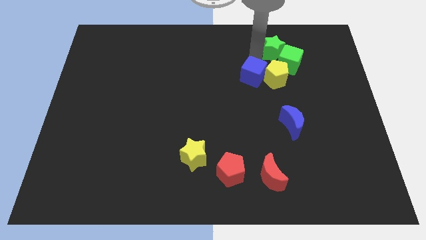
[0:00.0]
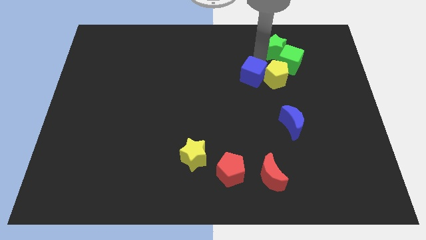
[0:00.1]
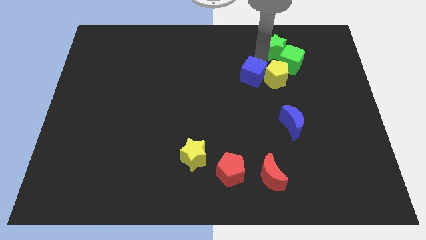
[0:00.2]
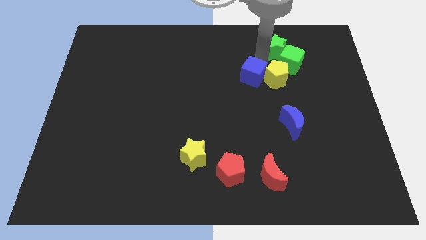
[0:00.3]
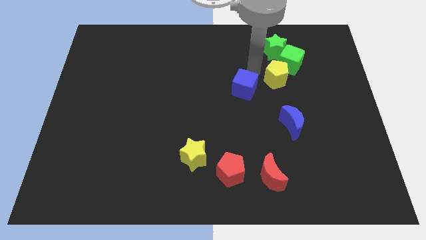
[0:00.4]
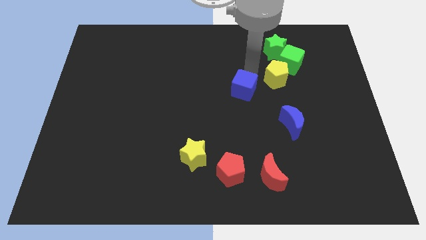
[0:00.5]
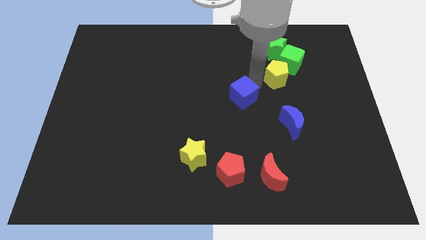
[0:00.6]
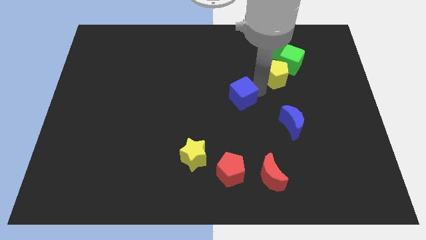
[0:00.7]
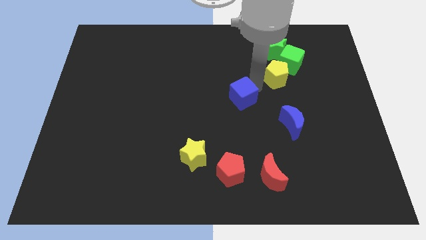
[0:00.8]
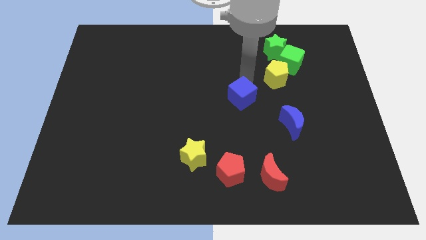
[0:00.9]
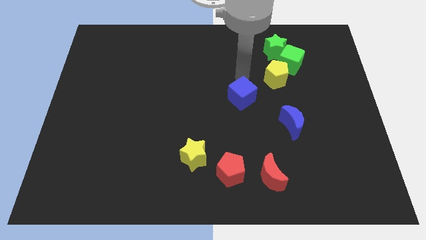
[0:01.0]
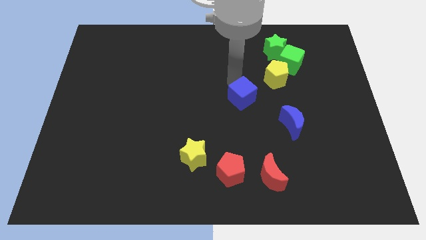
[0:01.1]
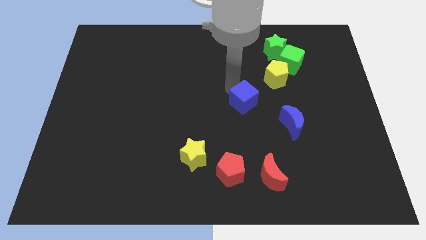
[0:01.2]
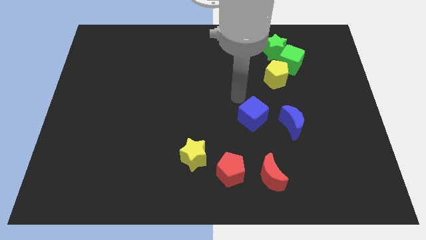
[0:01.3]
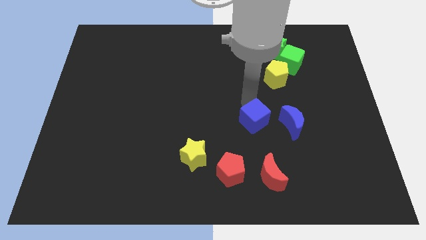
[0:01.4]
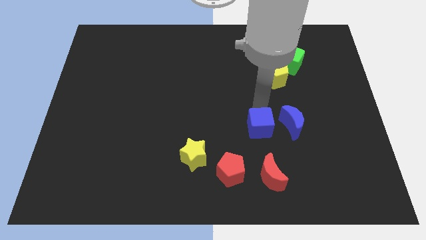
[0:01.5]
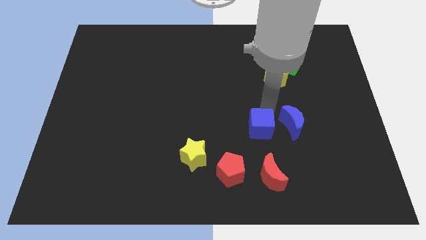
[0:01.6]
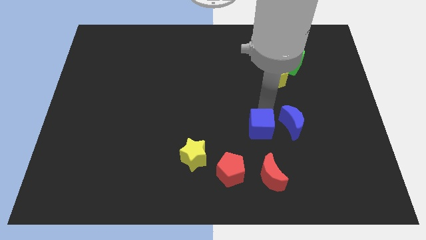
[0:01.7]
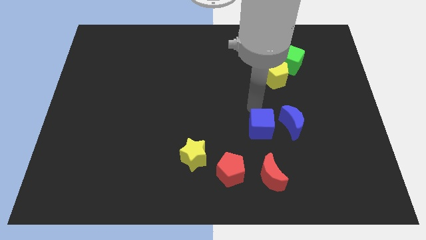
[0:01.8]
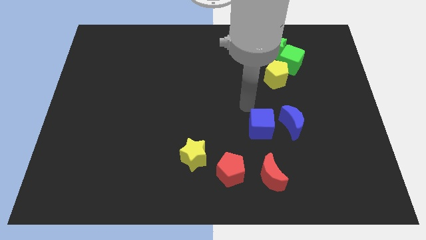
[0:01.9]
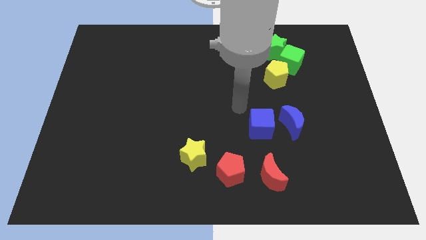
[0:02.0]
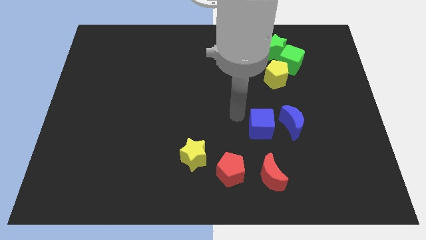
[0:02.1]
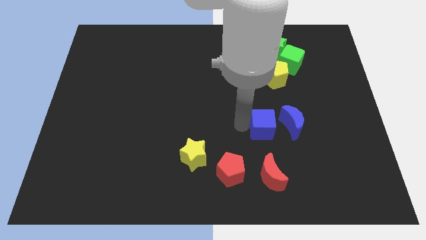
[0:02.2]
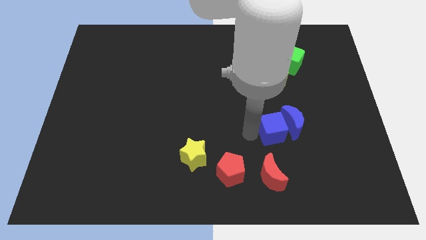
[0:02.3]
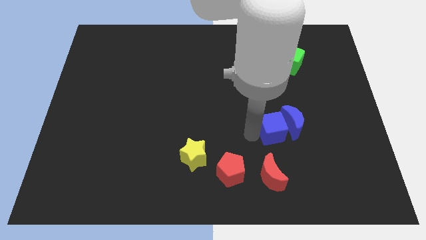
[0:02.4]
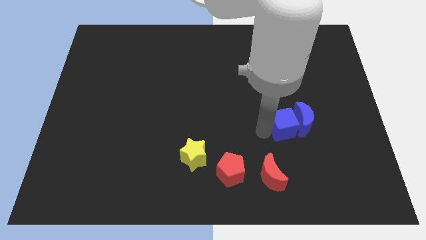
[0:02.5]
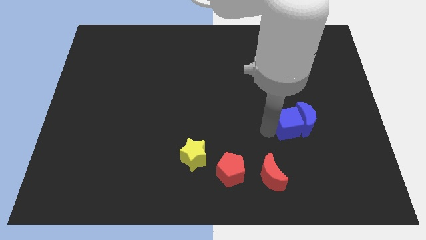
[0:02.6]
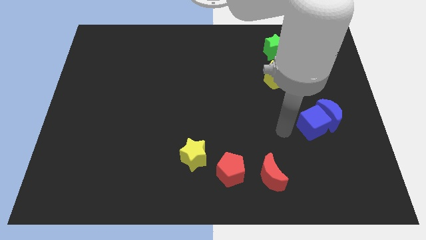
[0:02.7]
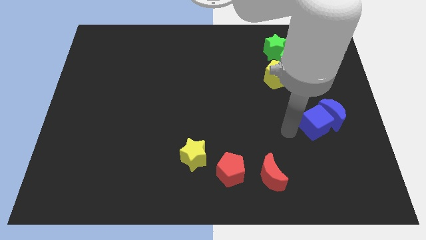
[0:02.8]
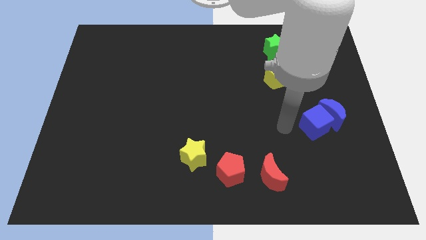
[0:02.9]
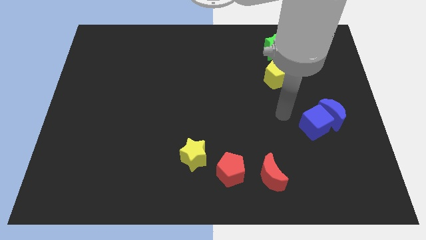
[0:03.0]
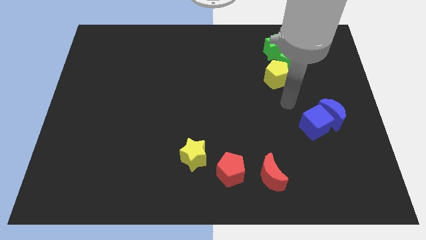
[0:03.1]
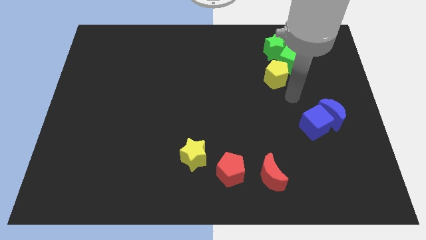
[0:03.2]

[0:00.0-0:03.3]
push the blue cube into the blue crescent

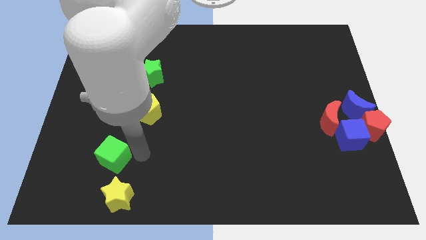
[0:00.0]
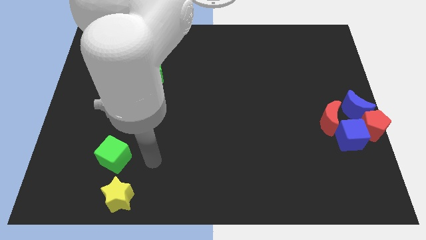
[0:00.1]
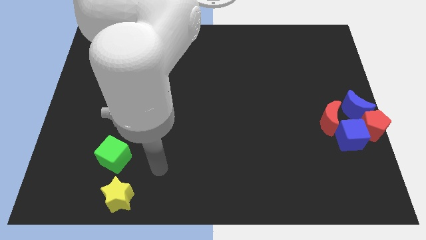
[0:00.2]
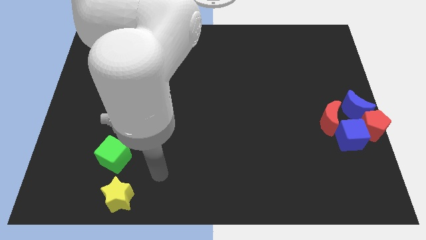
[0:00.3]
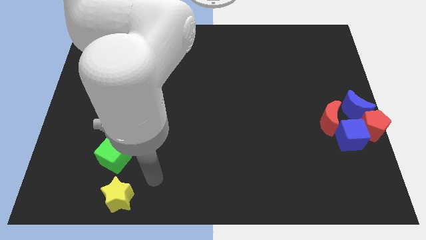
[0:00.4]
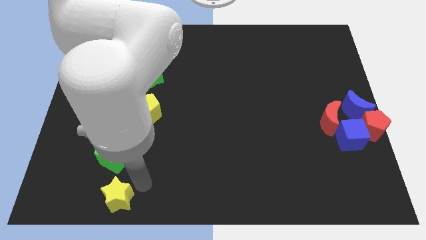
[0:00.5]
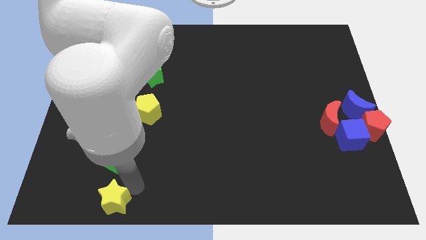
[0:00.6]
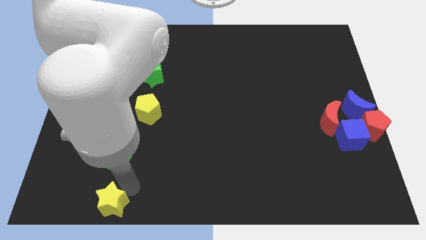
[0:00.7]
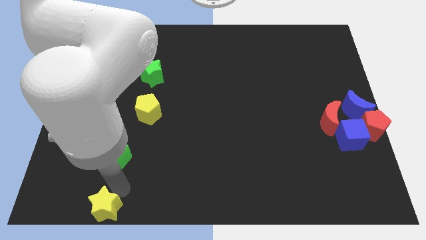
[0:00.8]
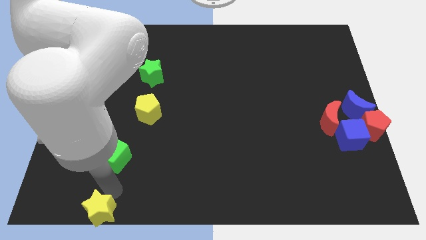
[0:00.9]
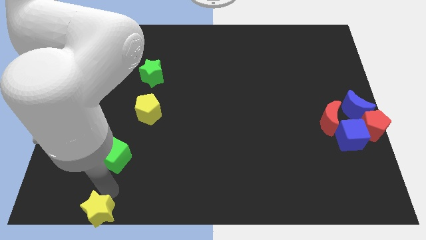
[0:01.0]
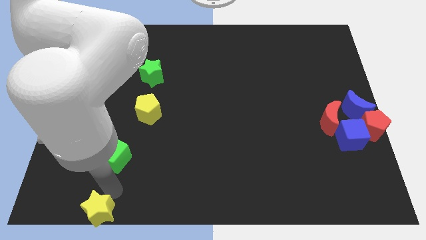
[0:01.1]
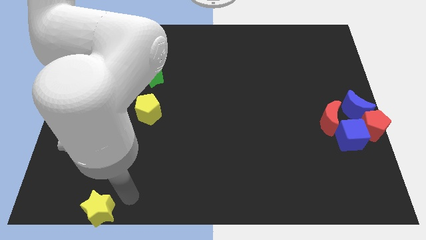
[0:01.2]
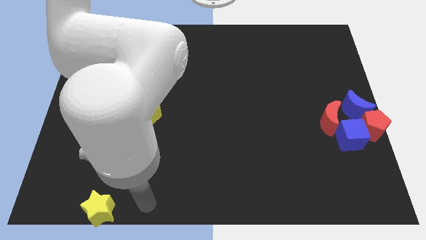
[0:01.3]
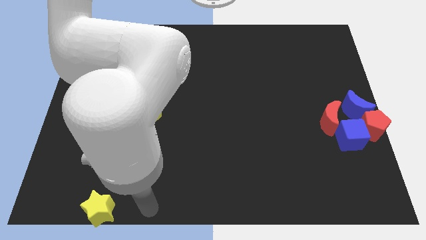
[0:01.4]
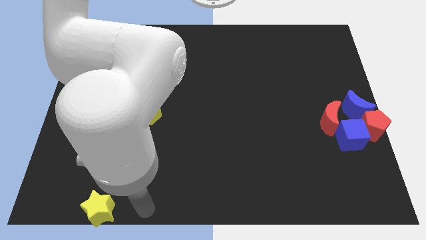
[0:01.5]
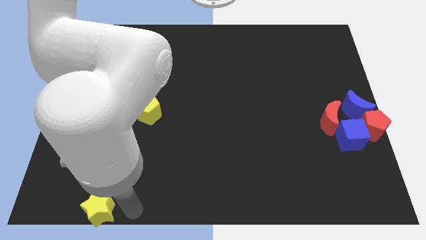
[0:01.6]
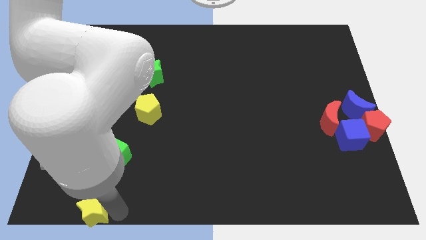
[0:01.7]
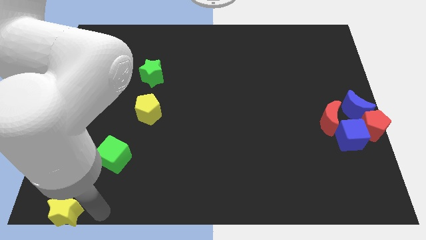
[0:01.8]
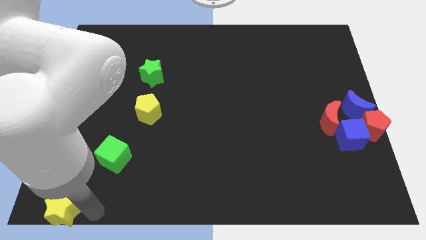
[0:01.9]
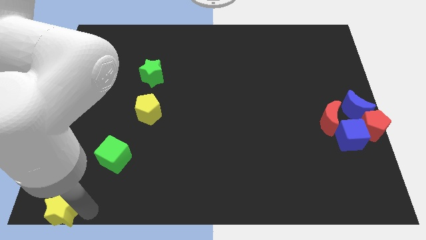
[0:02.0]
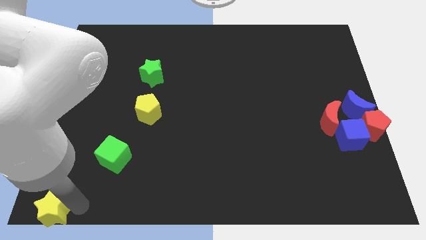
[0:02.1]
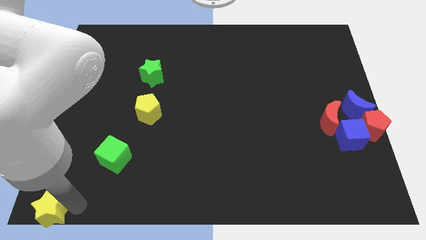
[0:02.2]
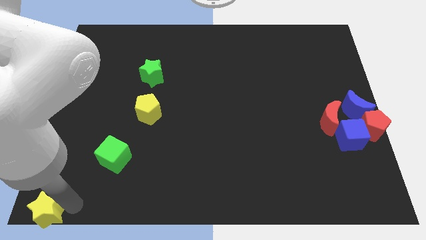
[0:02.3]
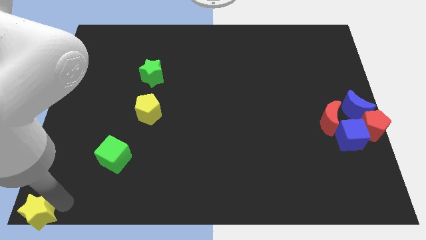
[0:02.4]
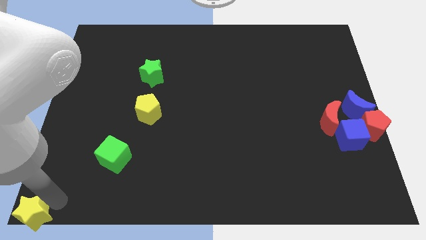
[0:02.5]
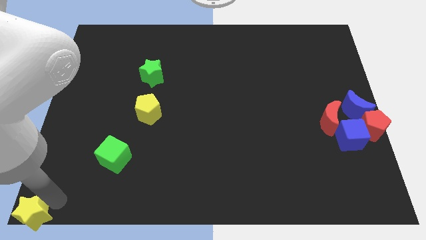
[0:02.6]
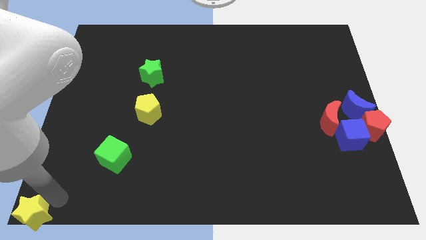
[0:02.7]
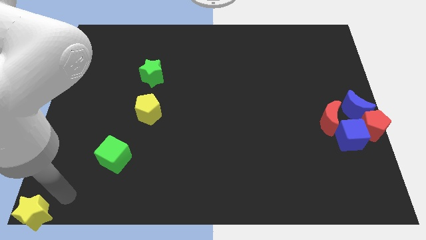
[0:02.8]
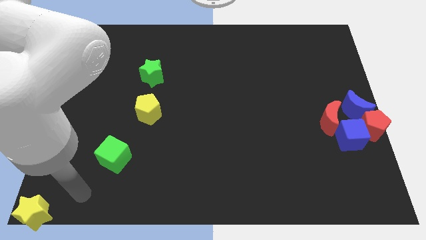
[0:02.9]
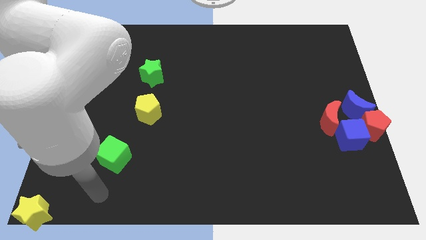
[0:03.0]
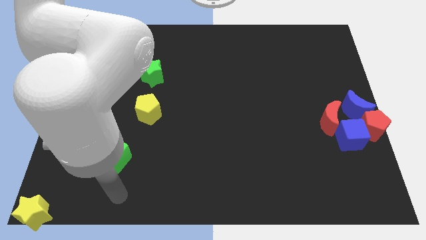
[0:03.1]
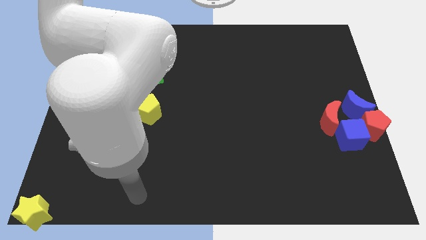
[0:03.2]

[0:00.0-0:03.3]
slide the yellow star to the bottom left corner of the board

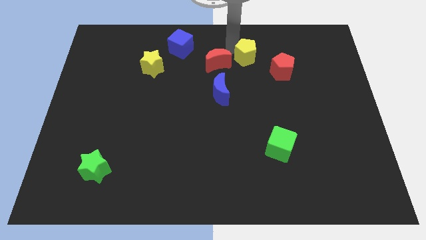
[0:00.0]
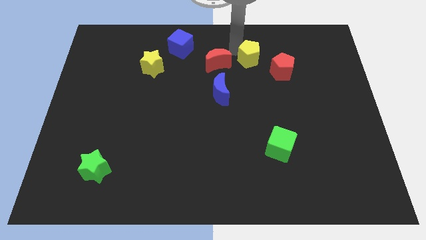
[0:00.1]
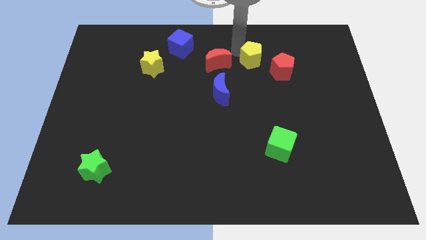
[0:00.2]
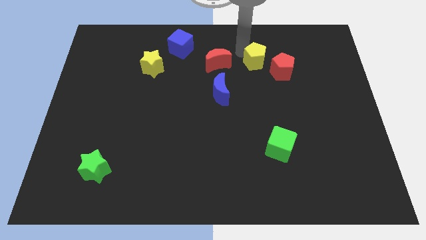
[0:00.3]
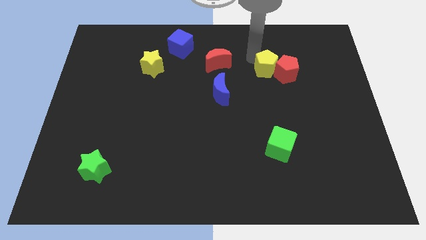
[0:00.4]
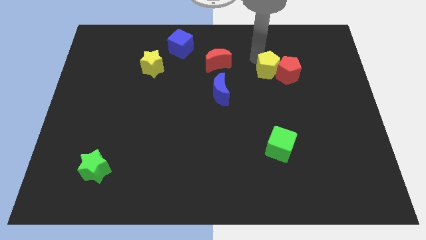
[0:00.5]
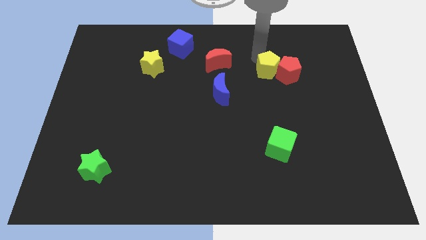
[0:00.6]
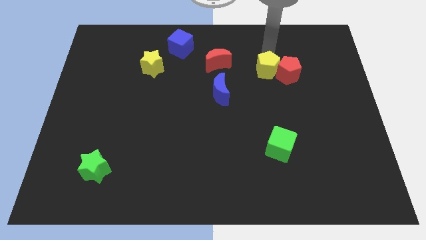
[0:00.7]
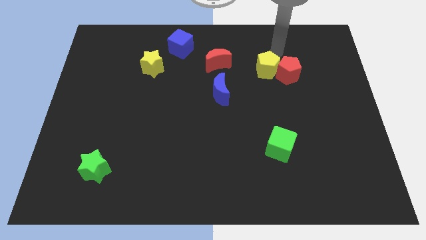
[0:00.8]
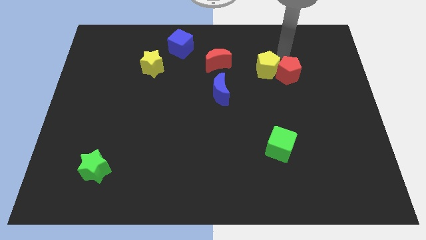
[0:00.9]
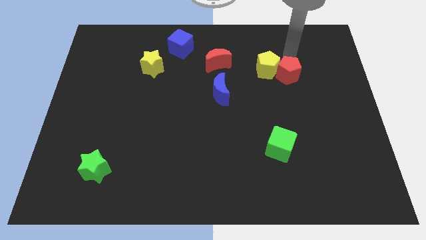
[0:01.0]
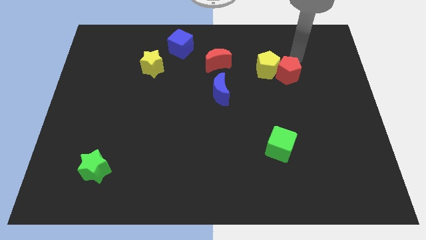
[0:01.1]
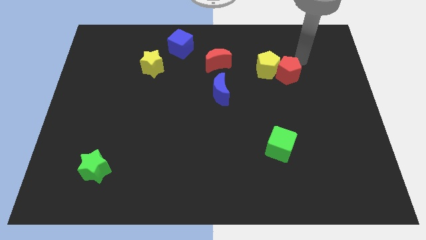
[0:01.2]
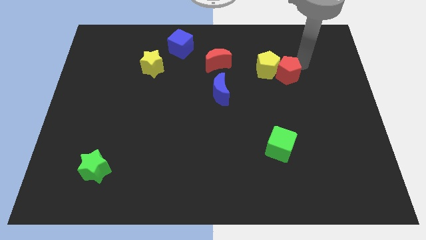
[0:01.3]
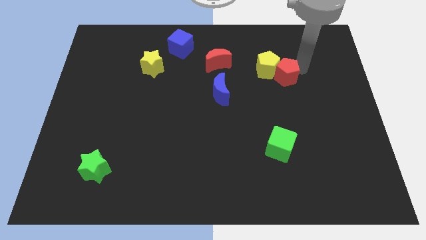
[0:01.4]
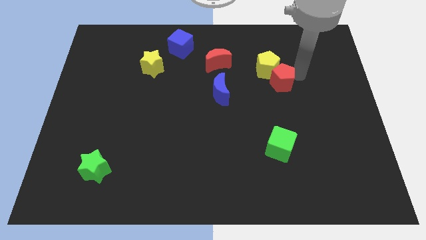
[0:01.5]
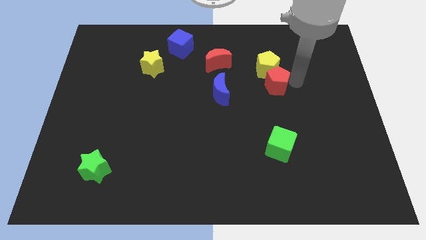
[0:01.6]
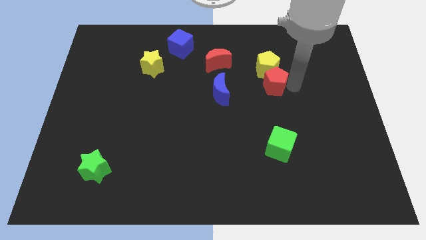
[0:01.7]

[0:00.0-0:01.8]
push the yellow pentagon into the red pentagon

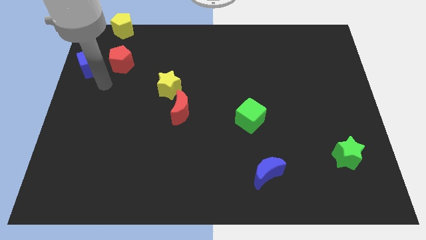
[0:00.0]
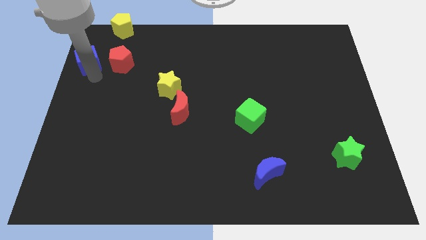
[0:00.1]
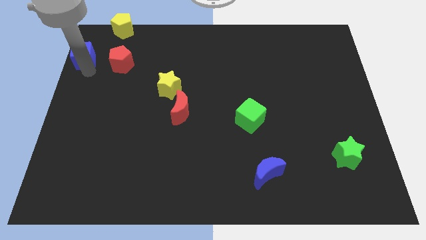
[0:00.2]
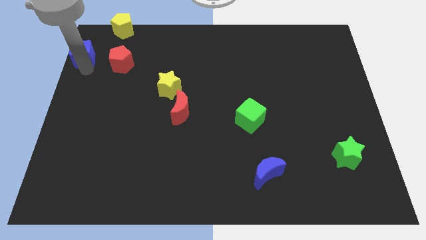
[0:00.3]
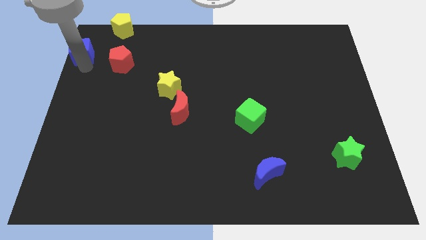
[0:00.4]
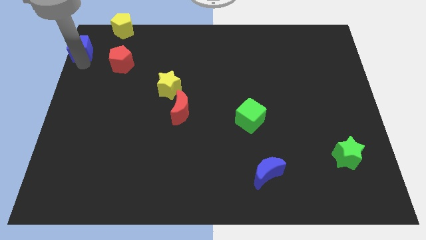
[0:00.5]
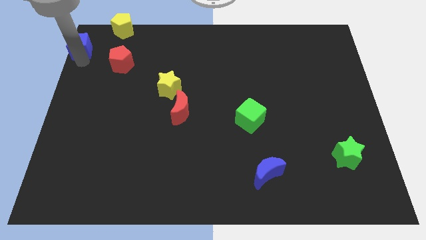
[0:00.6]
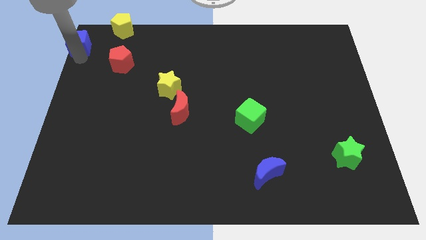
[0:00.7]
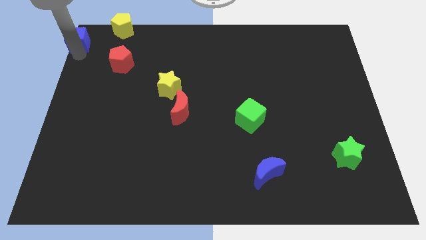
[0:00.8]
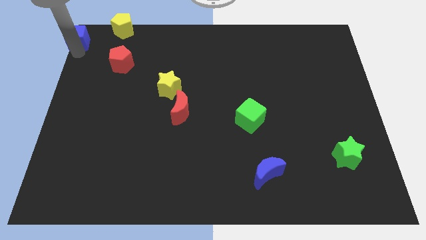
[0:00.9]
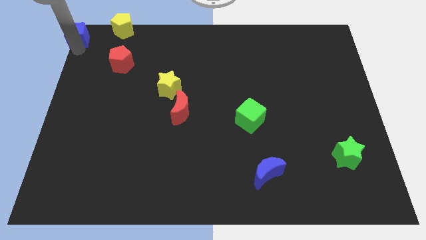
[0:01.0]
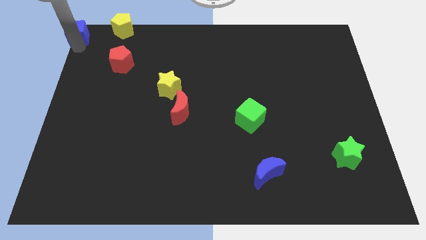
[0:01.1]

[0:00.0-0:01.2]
push blue cube towards the top left corner of the board
